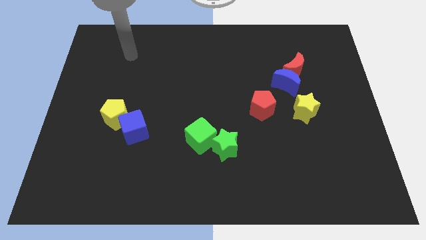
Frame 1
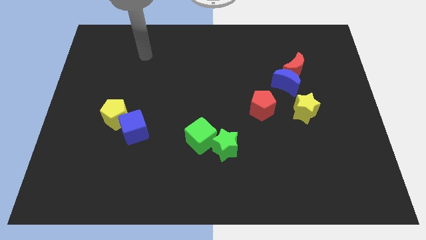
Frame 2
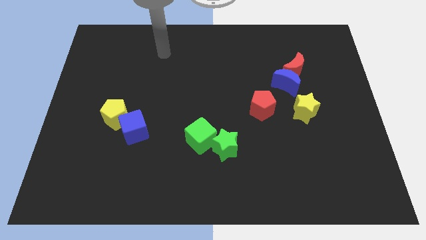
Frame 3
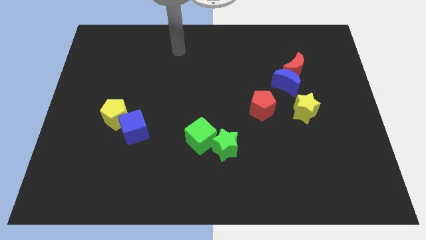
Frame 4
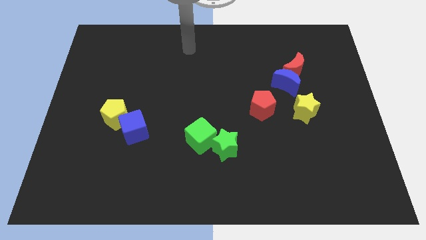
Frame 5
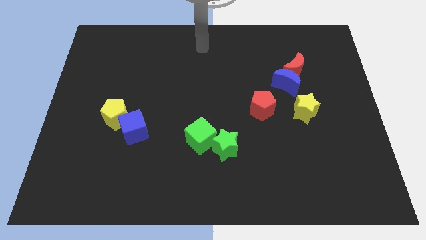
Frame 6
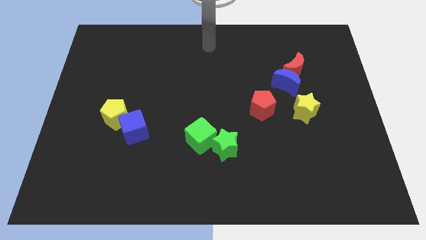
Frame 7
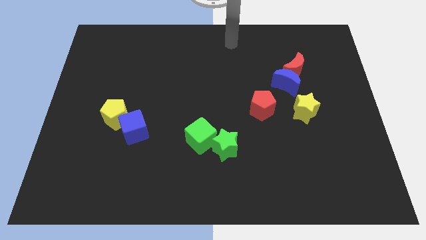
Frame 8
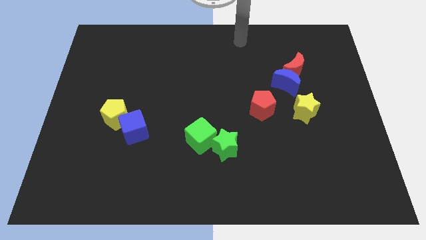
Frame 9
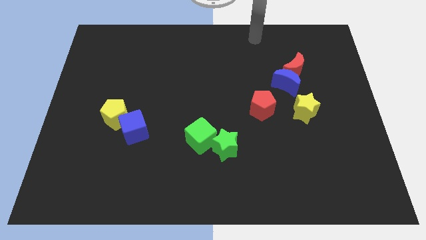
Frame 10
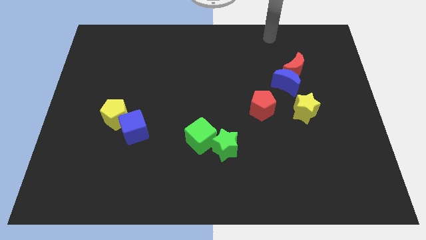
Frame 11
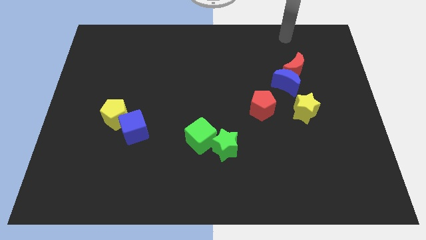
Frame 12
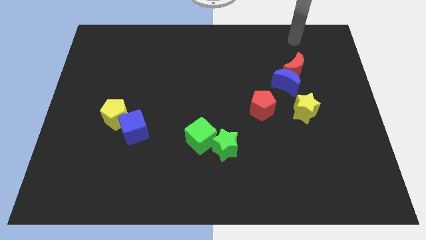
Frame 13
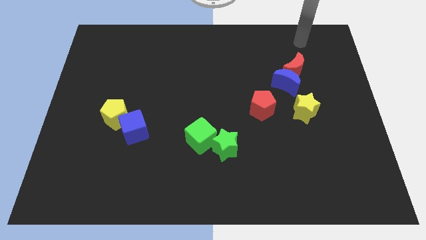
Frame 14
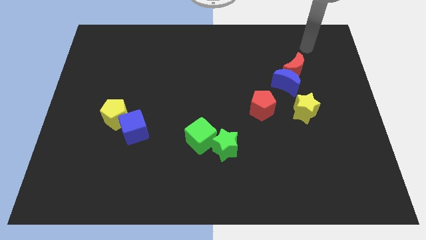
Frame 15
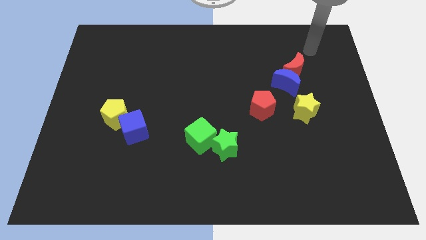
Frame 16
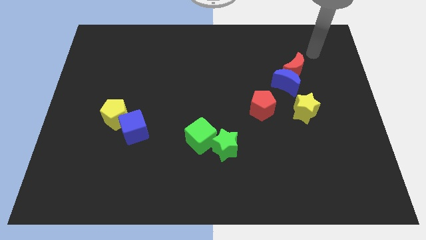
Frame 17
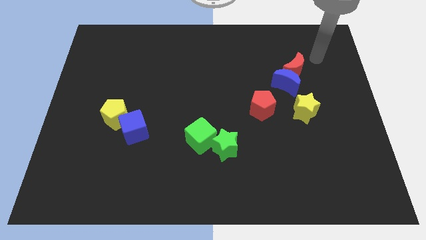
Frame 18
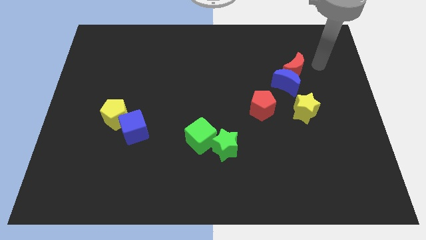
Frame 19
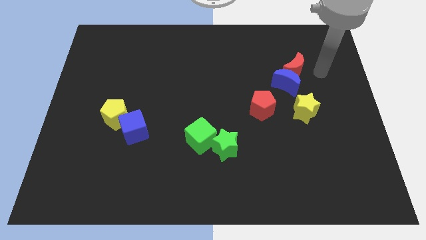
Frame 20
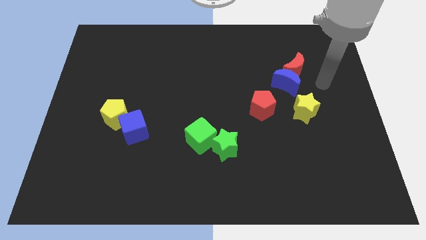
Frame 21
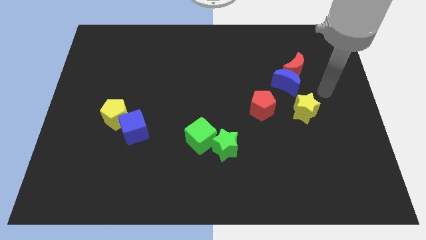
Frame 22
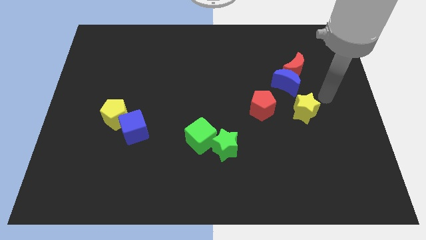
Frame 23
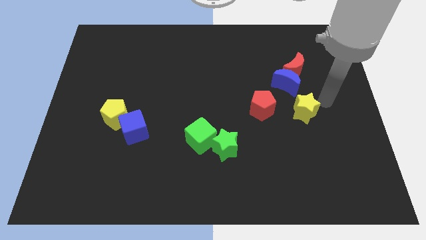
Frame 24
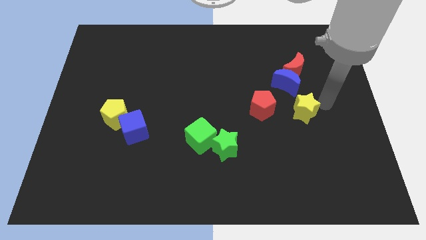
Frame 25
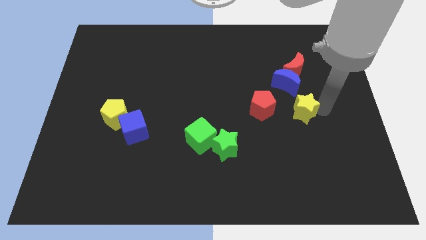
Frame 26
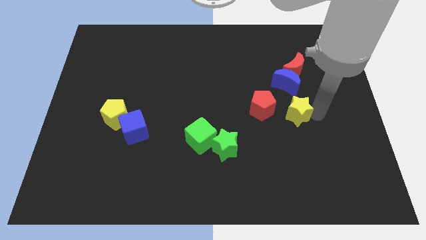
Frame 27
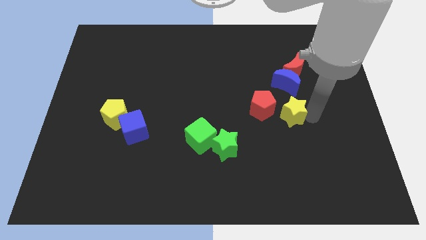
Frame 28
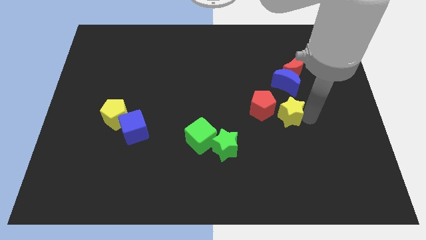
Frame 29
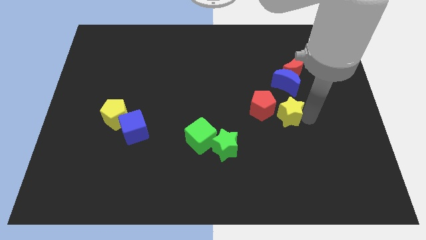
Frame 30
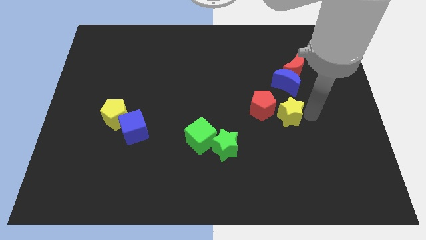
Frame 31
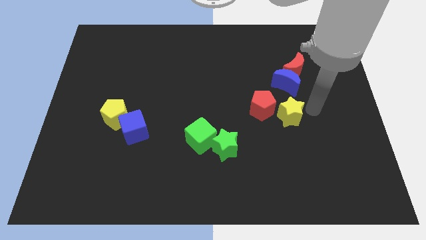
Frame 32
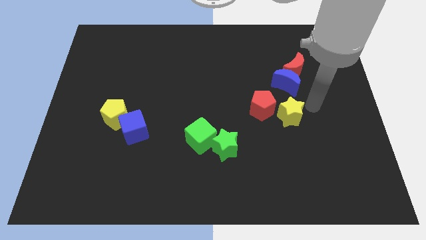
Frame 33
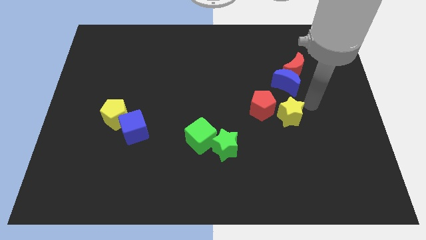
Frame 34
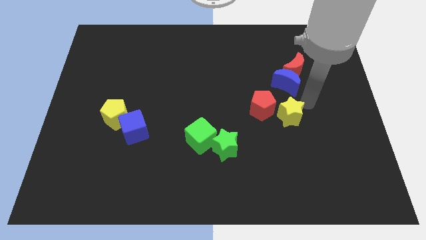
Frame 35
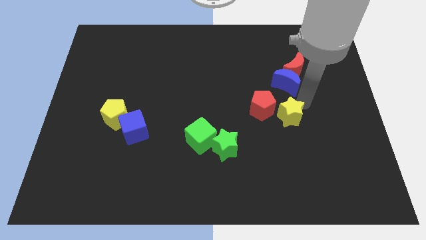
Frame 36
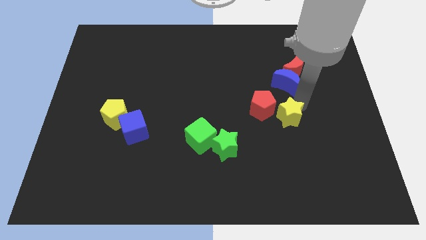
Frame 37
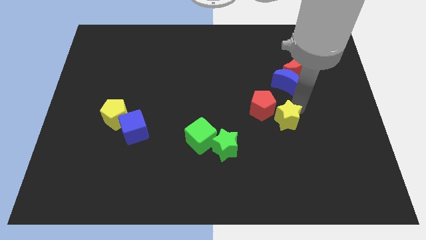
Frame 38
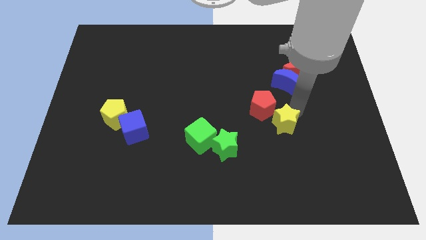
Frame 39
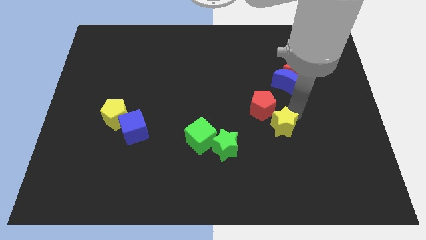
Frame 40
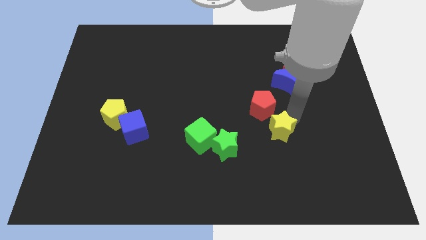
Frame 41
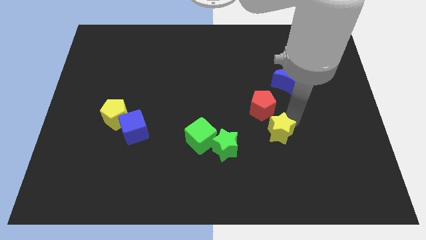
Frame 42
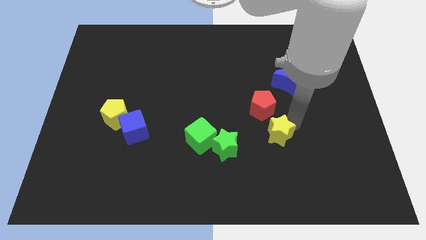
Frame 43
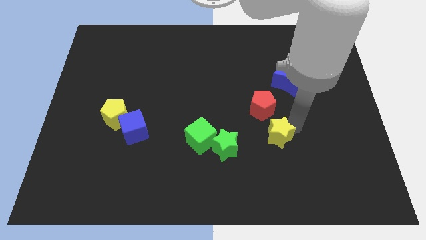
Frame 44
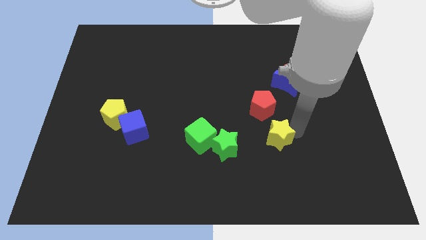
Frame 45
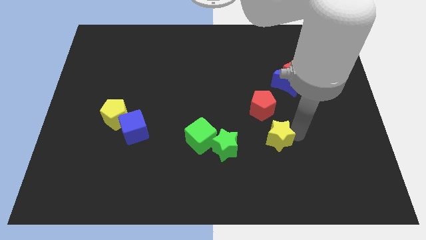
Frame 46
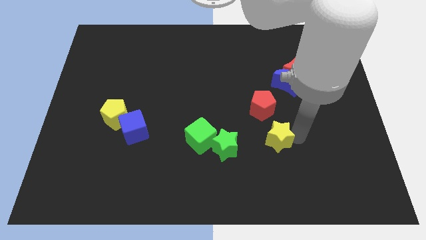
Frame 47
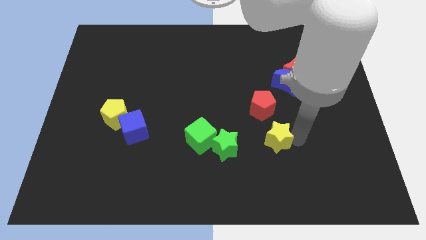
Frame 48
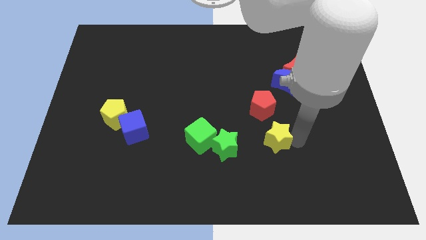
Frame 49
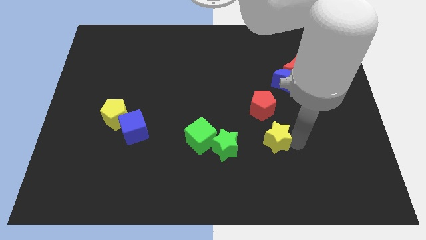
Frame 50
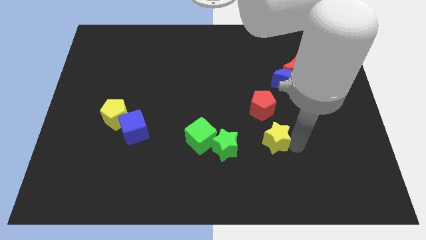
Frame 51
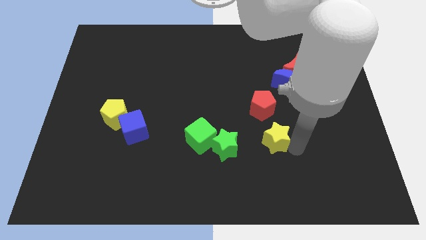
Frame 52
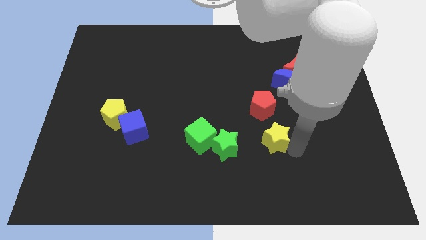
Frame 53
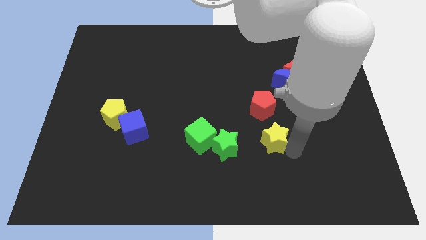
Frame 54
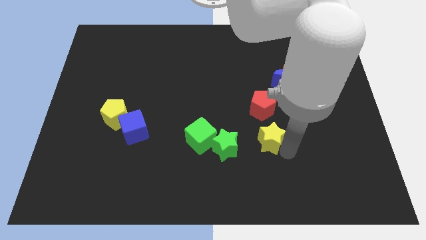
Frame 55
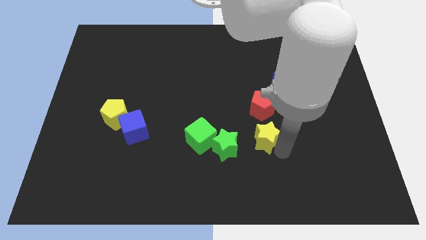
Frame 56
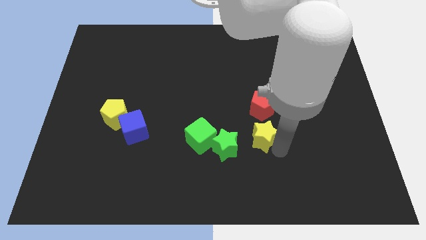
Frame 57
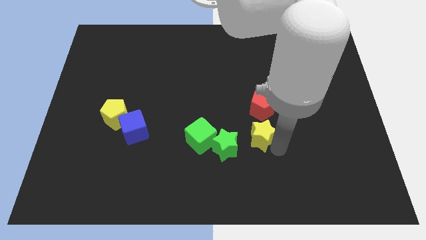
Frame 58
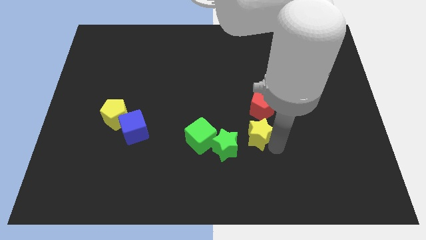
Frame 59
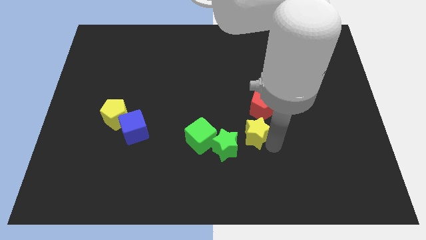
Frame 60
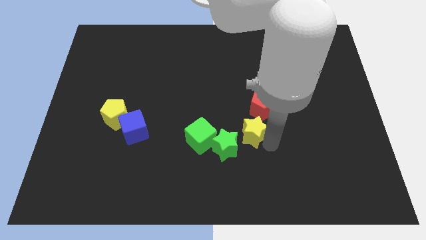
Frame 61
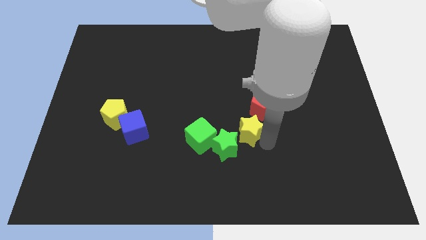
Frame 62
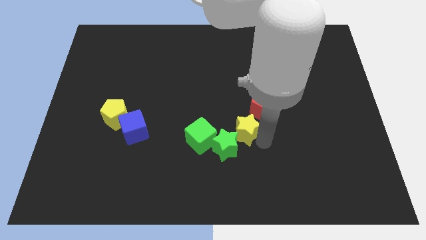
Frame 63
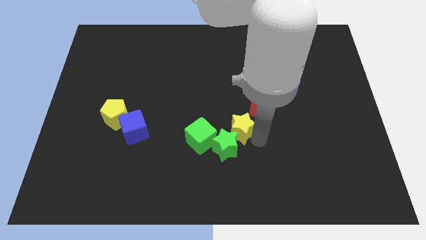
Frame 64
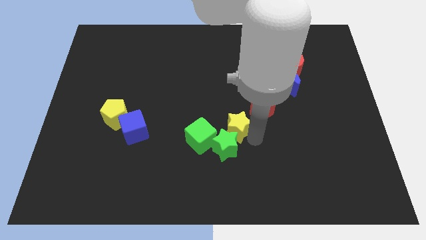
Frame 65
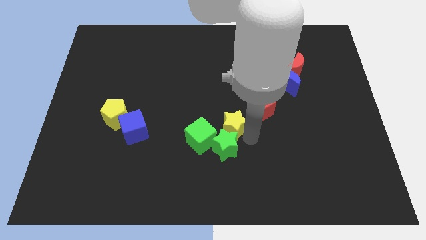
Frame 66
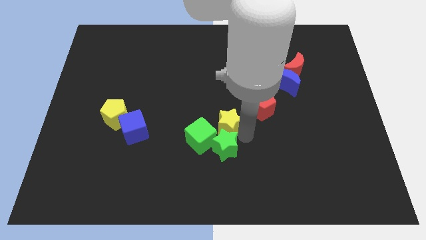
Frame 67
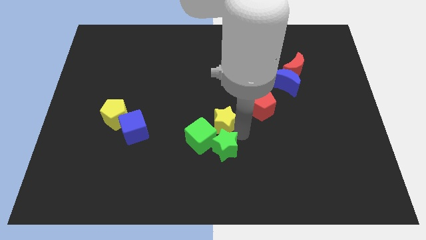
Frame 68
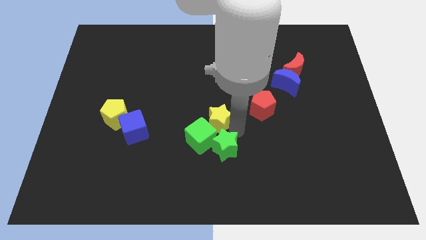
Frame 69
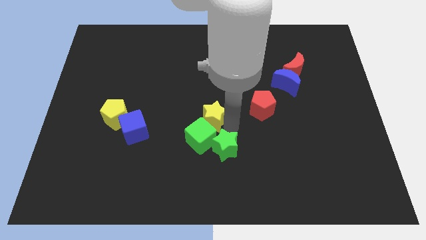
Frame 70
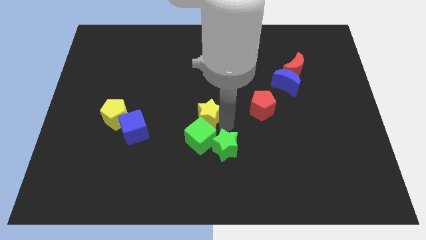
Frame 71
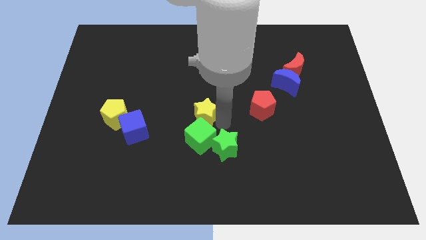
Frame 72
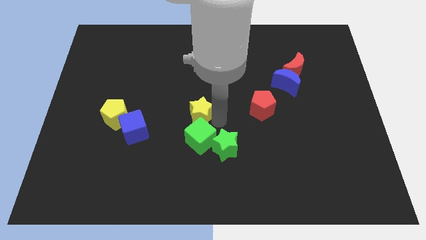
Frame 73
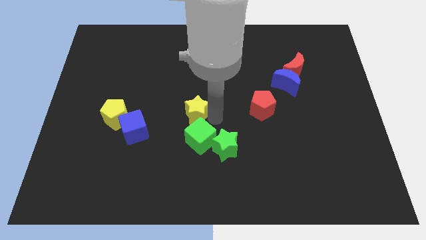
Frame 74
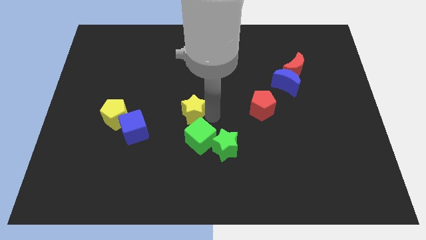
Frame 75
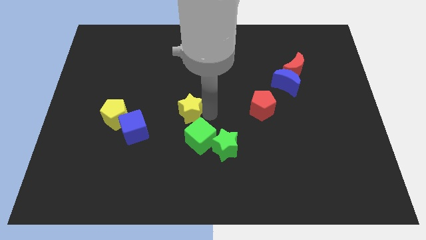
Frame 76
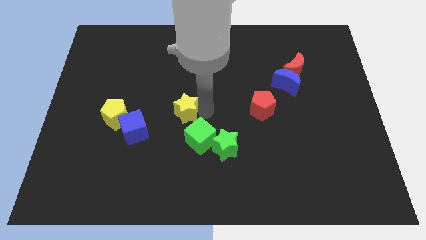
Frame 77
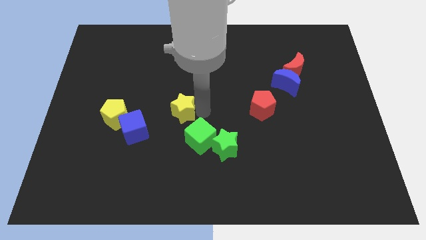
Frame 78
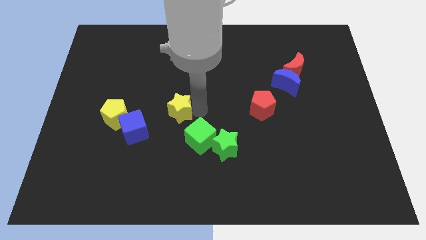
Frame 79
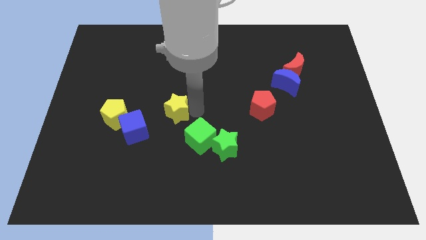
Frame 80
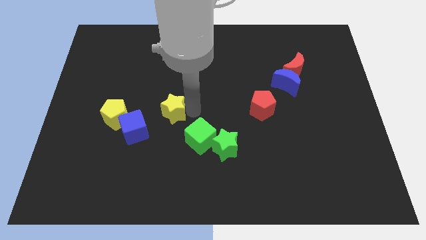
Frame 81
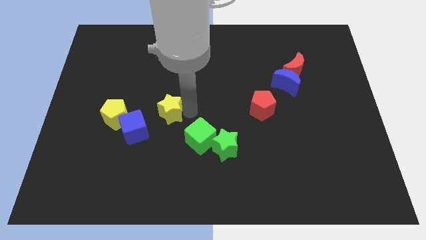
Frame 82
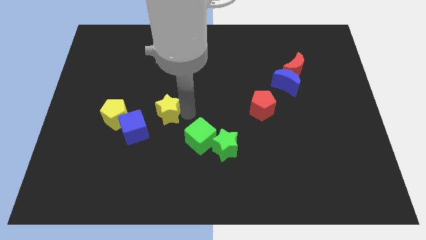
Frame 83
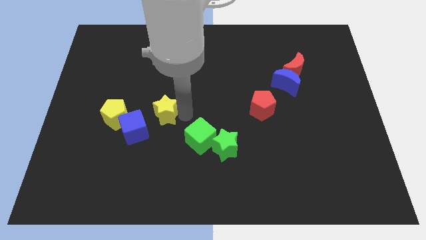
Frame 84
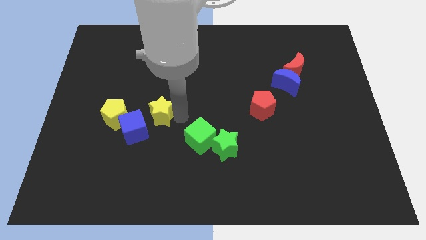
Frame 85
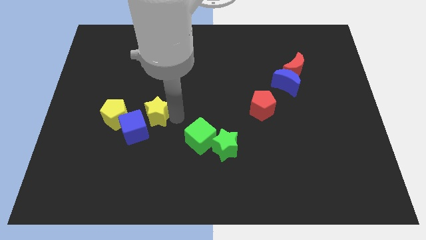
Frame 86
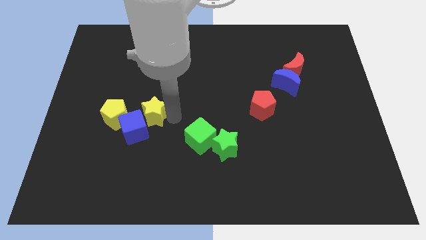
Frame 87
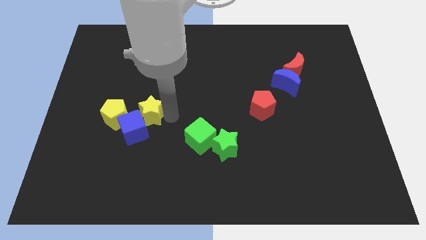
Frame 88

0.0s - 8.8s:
put the yellow star next to the blue cube

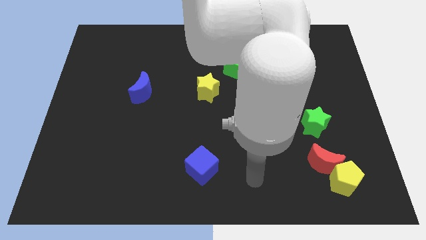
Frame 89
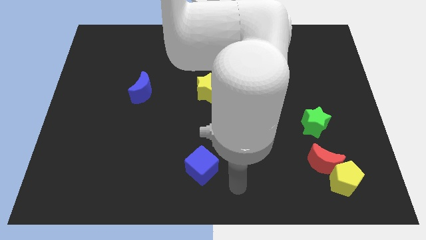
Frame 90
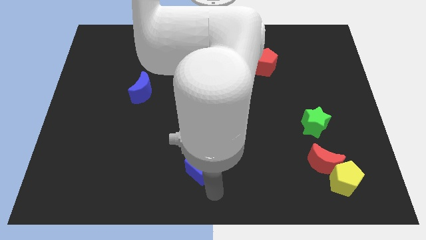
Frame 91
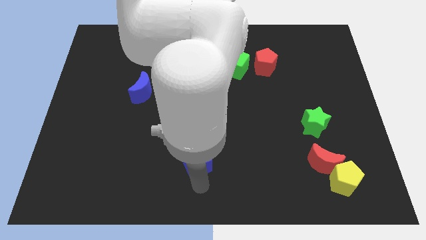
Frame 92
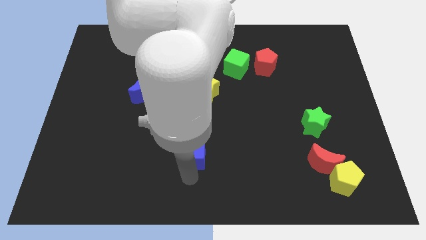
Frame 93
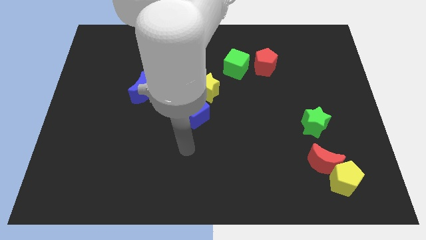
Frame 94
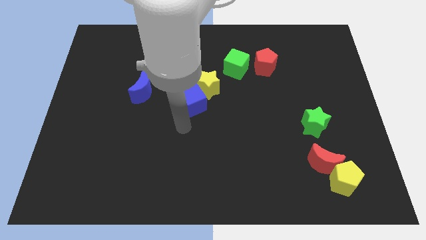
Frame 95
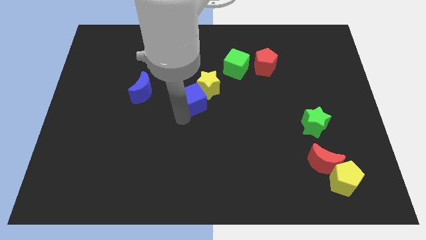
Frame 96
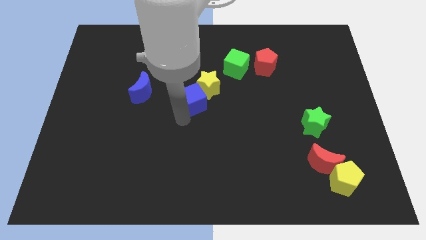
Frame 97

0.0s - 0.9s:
push the blue cube to the yellow star
